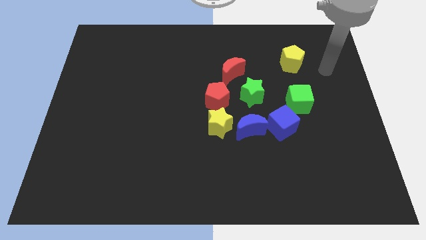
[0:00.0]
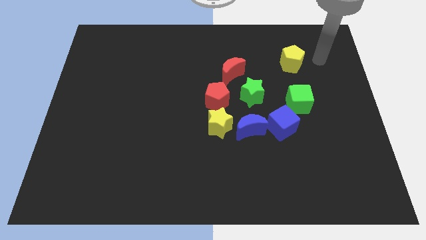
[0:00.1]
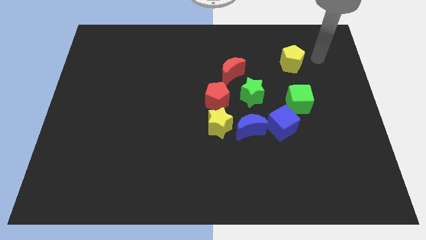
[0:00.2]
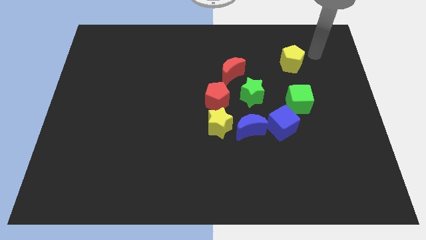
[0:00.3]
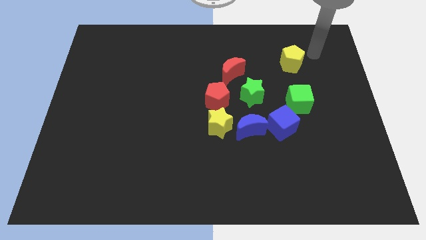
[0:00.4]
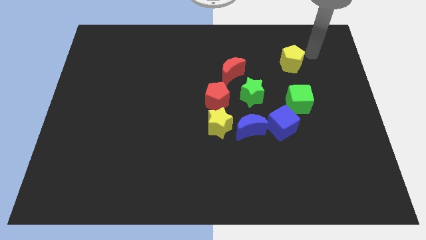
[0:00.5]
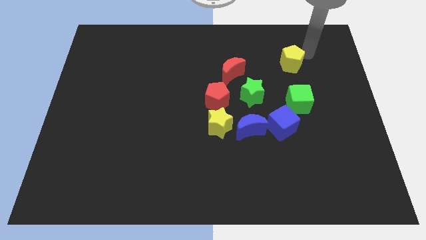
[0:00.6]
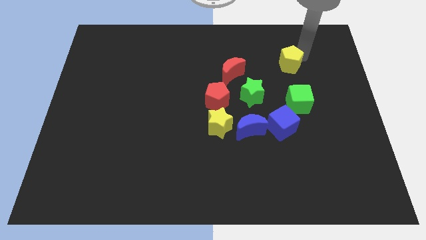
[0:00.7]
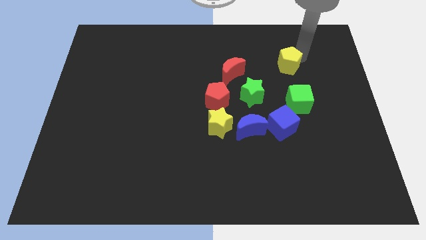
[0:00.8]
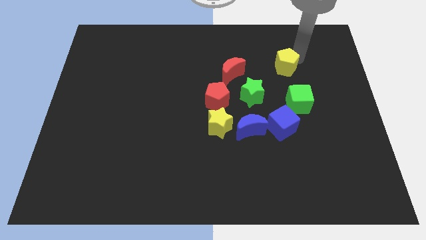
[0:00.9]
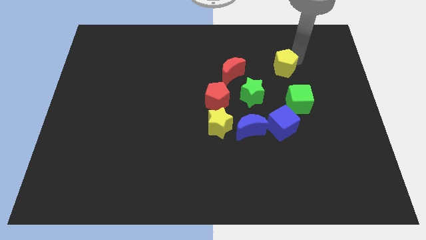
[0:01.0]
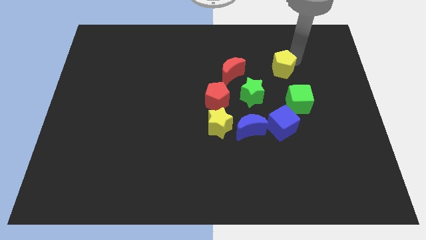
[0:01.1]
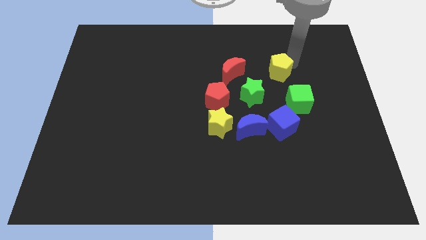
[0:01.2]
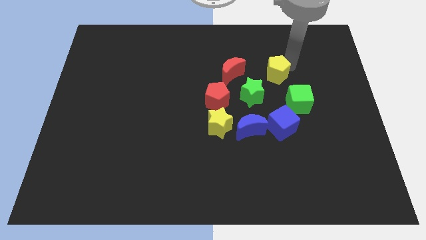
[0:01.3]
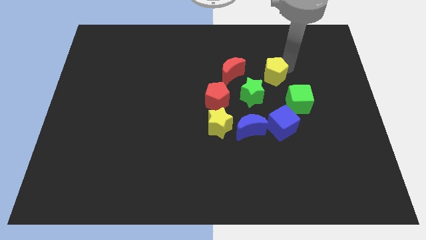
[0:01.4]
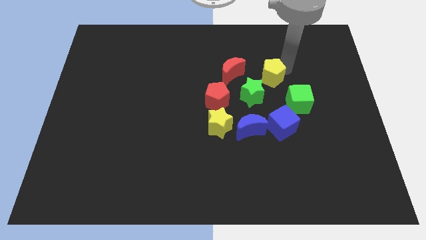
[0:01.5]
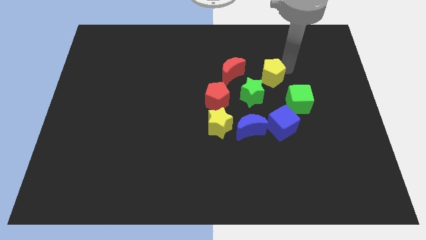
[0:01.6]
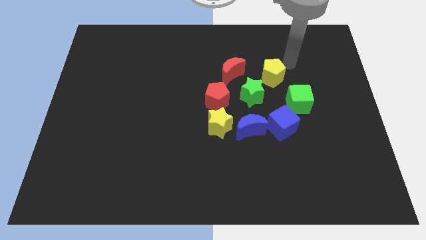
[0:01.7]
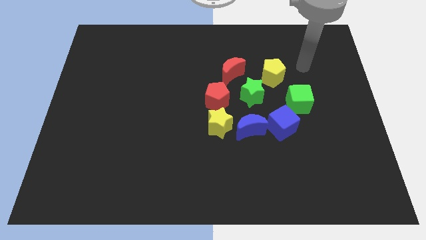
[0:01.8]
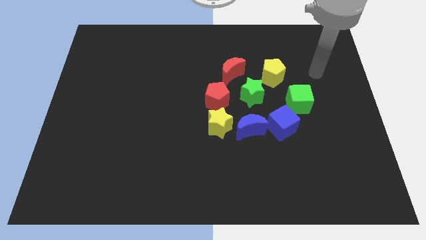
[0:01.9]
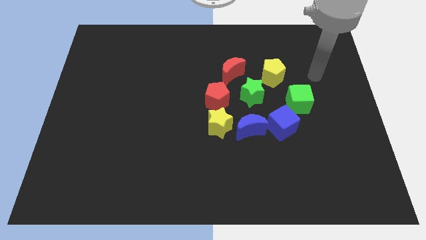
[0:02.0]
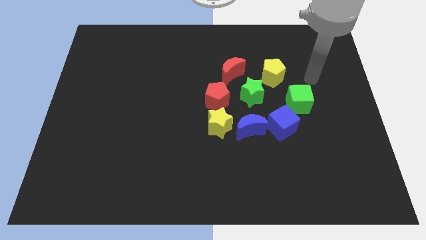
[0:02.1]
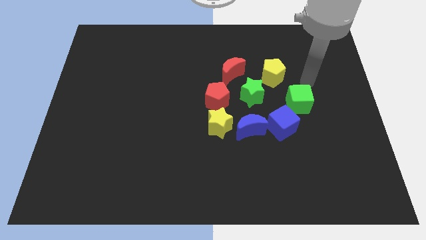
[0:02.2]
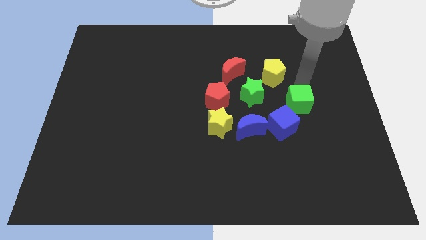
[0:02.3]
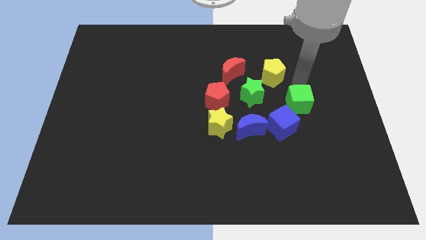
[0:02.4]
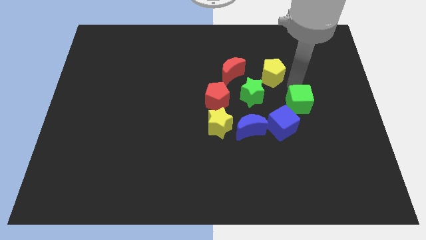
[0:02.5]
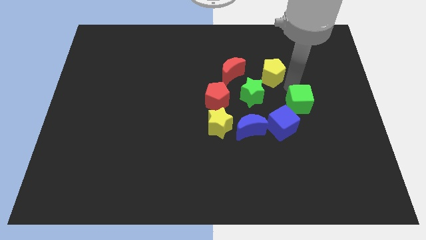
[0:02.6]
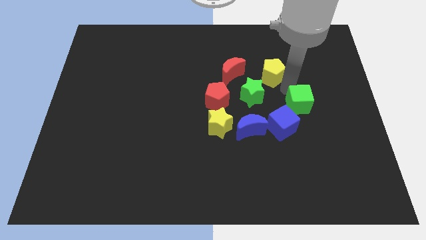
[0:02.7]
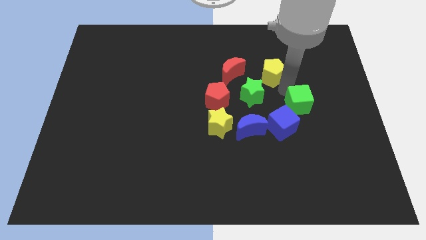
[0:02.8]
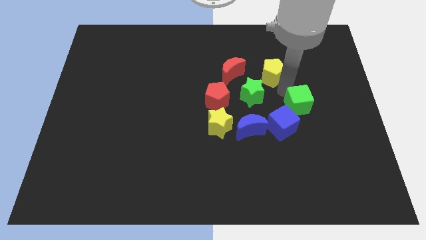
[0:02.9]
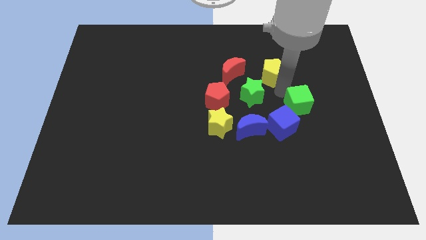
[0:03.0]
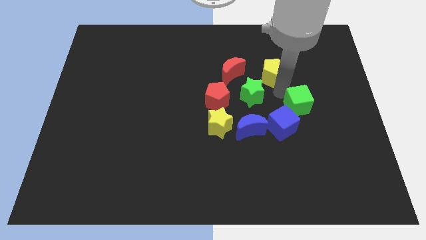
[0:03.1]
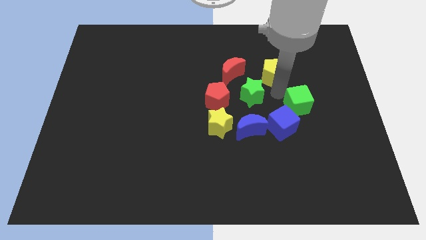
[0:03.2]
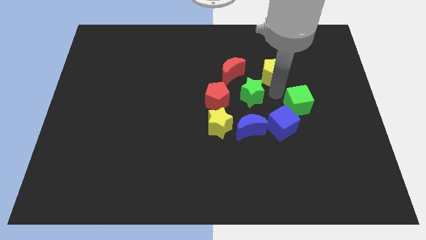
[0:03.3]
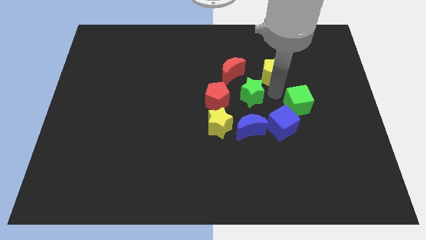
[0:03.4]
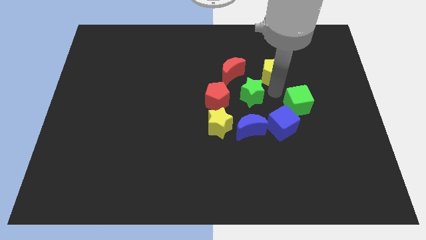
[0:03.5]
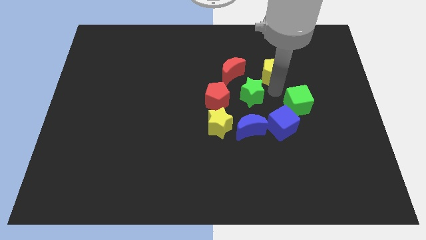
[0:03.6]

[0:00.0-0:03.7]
move the yellow pentagon to the right of the green star

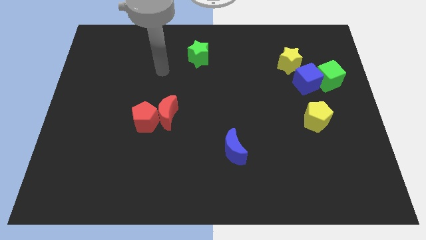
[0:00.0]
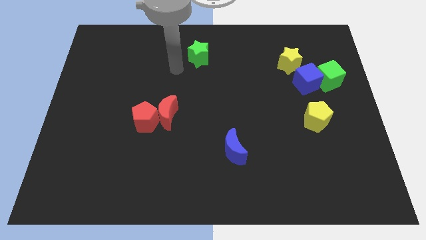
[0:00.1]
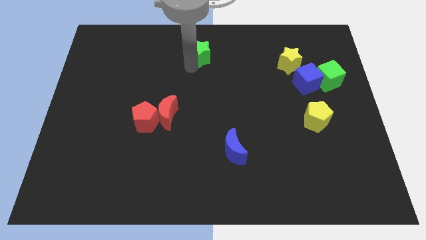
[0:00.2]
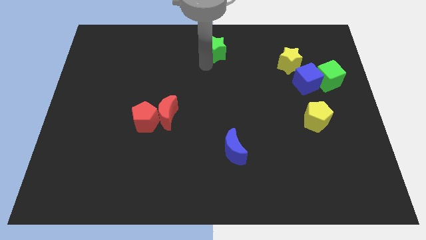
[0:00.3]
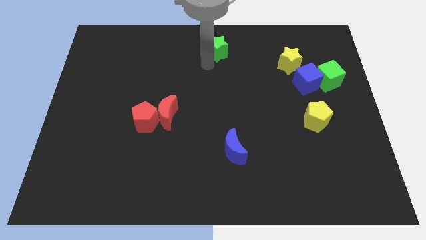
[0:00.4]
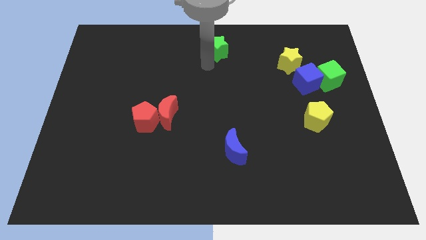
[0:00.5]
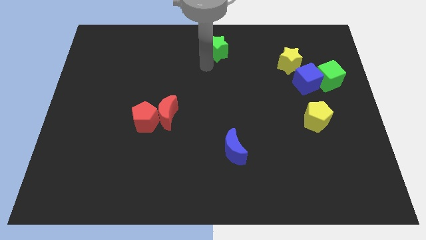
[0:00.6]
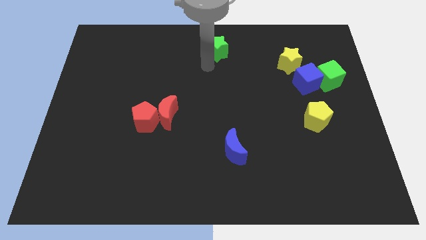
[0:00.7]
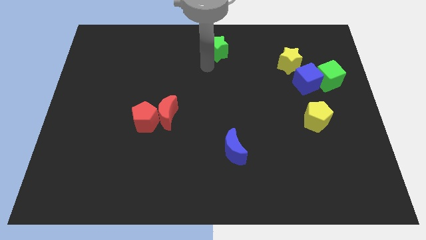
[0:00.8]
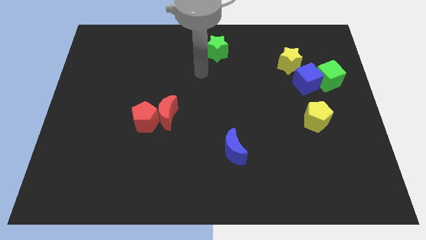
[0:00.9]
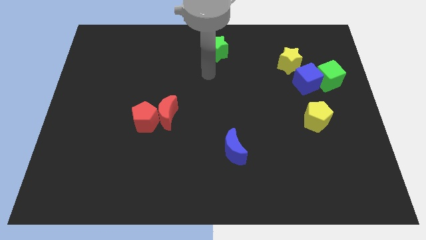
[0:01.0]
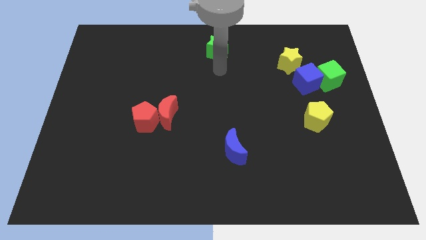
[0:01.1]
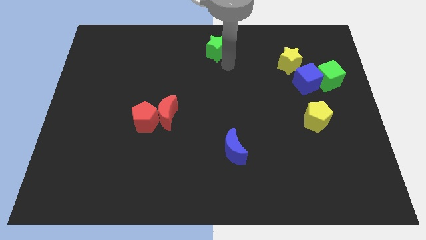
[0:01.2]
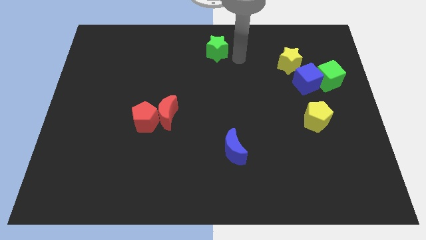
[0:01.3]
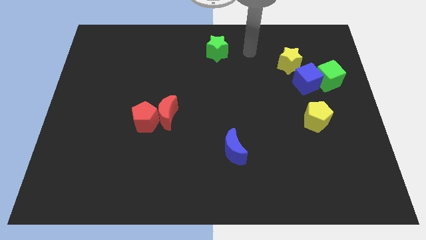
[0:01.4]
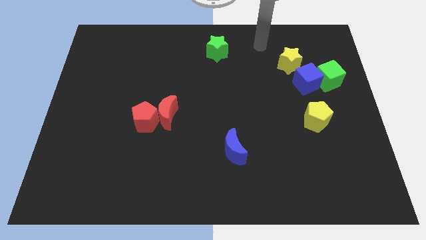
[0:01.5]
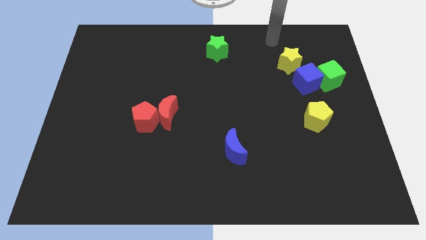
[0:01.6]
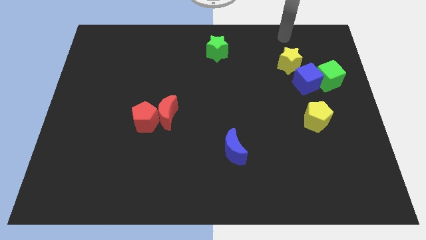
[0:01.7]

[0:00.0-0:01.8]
push the green star upward

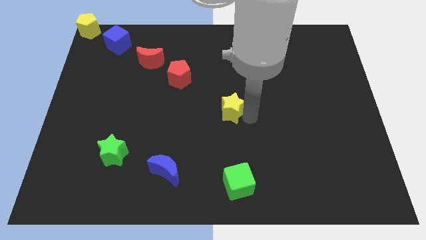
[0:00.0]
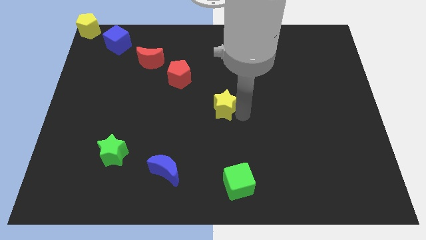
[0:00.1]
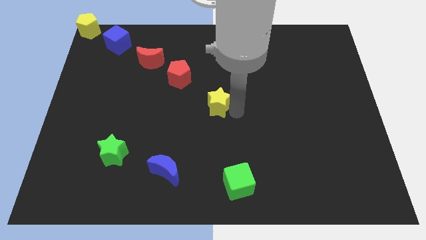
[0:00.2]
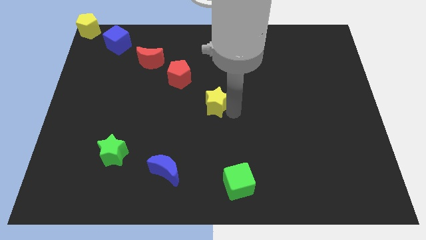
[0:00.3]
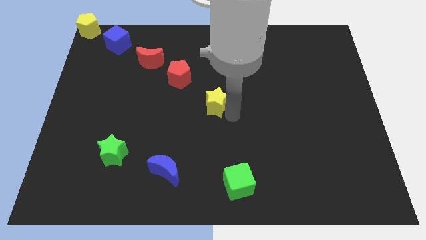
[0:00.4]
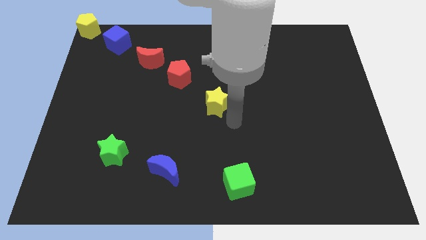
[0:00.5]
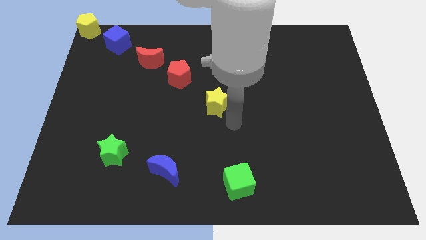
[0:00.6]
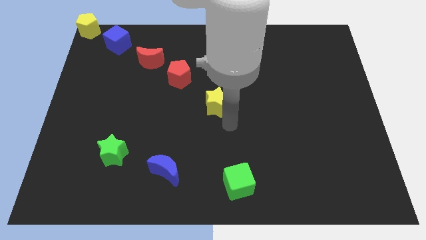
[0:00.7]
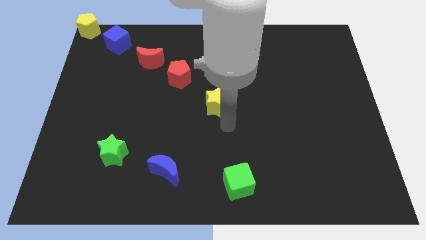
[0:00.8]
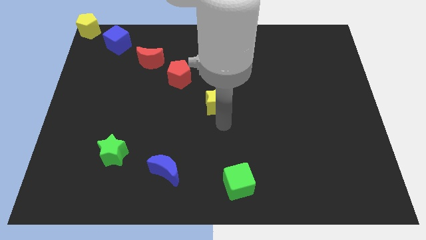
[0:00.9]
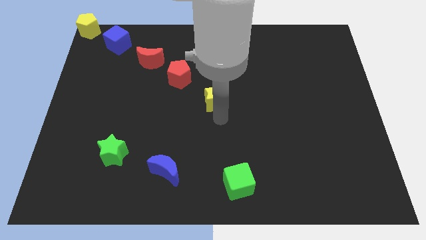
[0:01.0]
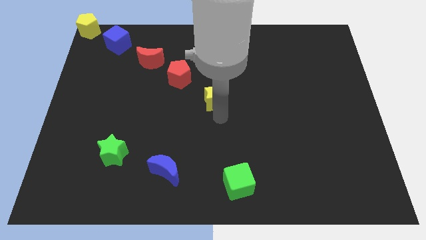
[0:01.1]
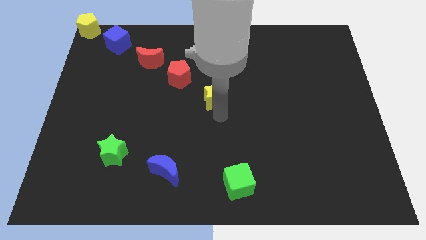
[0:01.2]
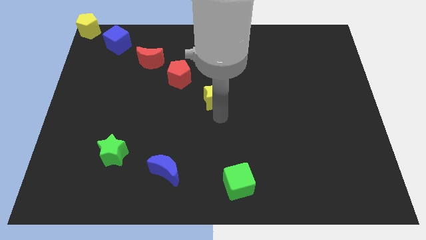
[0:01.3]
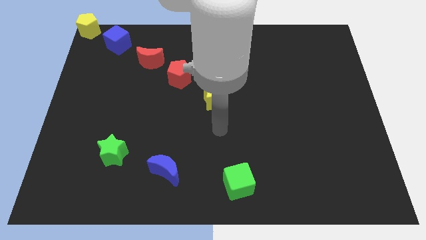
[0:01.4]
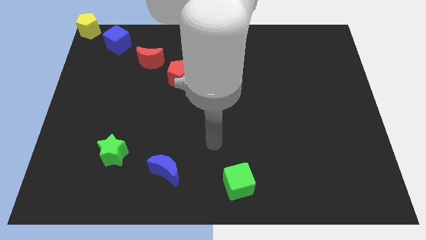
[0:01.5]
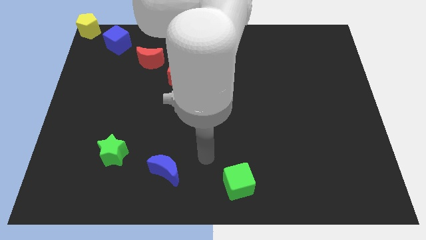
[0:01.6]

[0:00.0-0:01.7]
move the yellow star to the center on the board

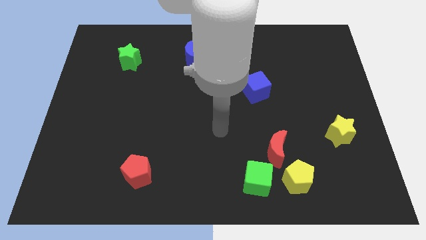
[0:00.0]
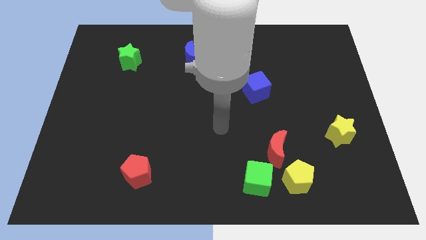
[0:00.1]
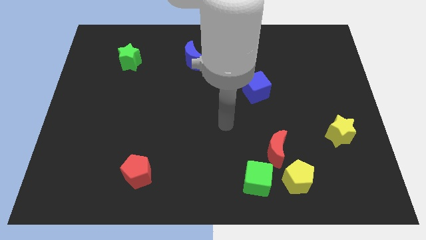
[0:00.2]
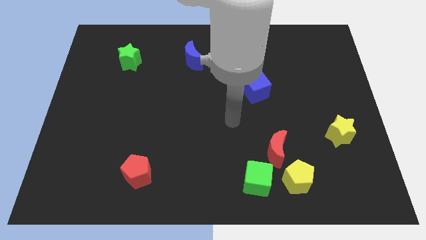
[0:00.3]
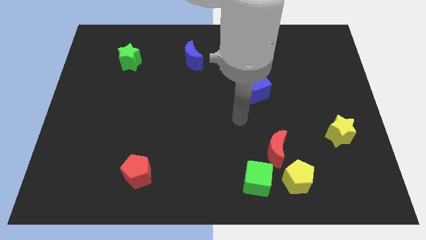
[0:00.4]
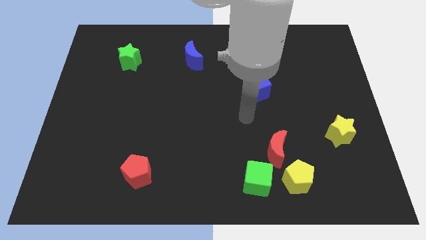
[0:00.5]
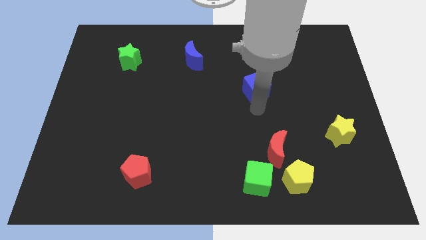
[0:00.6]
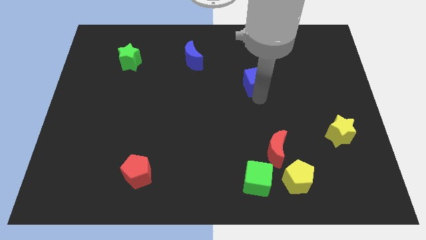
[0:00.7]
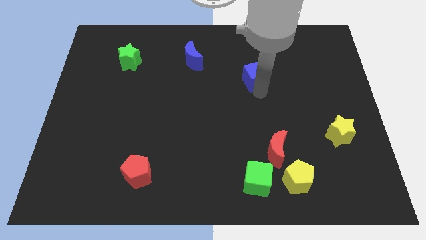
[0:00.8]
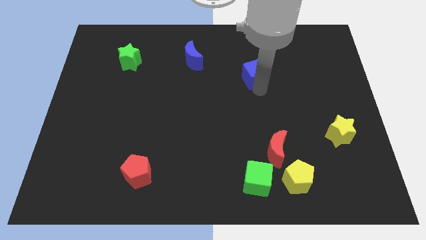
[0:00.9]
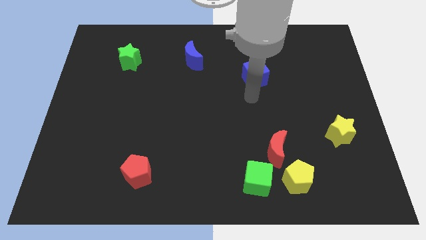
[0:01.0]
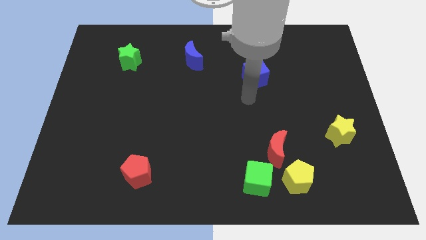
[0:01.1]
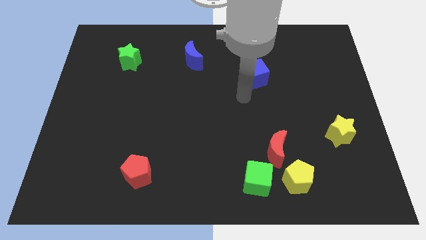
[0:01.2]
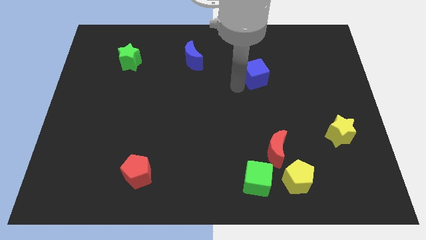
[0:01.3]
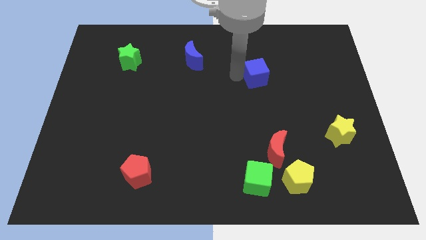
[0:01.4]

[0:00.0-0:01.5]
move the blue cube upwards

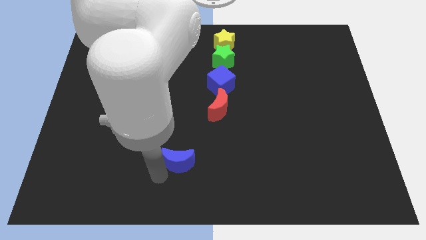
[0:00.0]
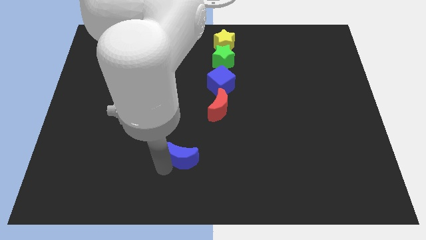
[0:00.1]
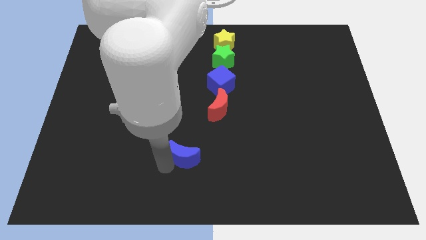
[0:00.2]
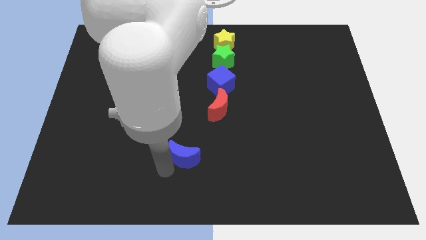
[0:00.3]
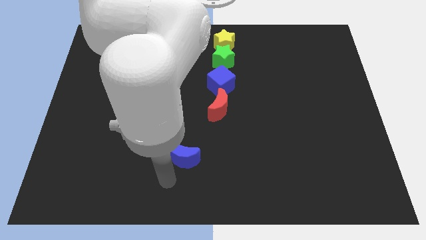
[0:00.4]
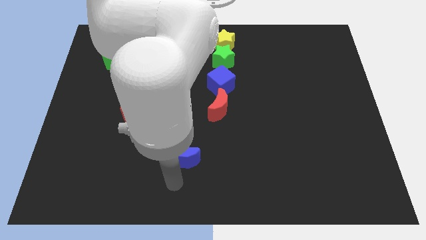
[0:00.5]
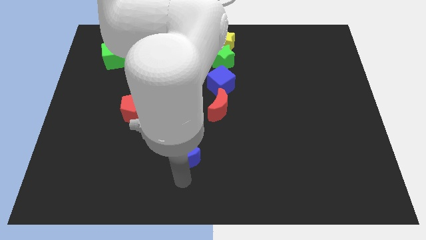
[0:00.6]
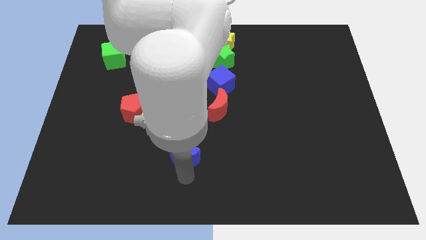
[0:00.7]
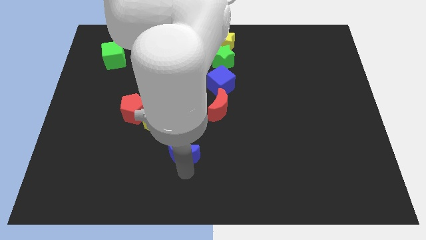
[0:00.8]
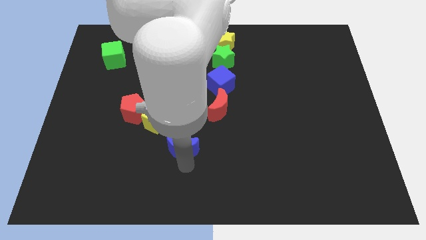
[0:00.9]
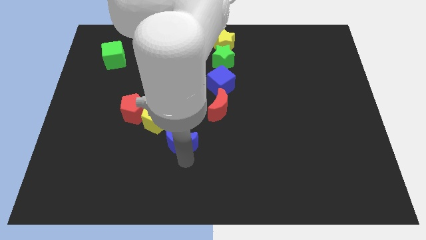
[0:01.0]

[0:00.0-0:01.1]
push the blue moon up slightly
